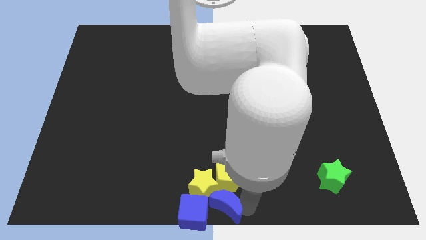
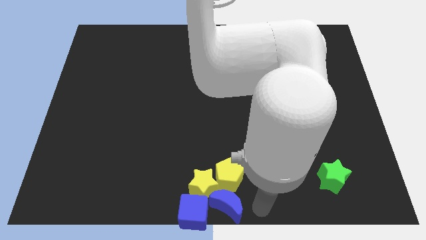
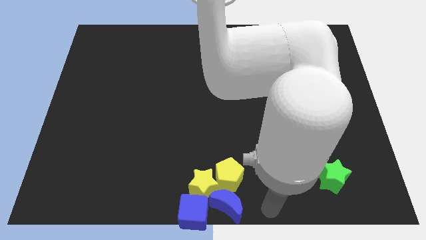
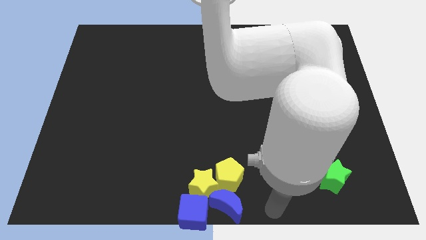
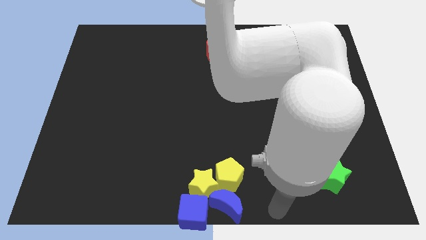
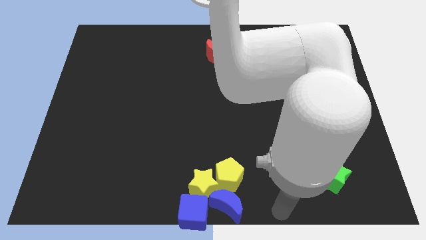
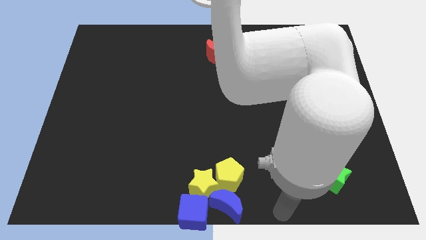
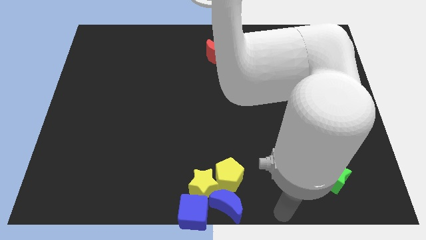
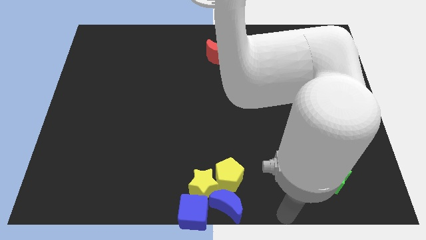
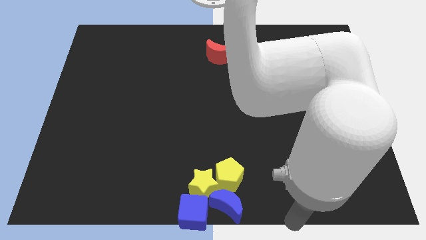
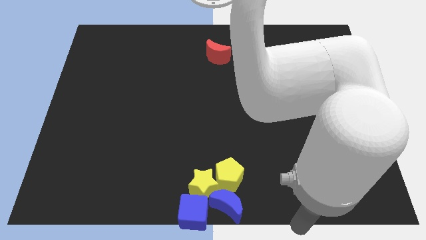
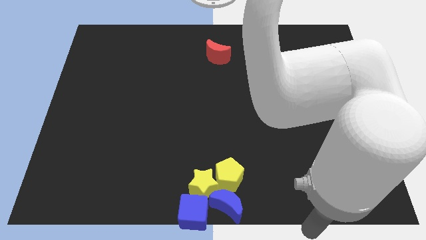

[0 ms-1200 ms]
go away from the group of blocks

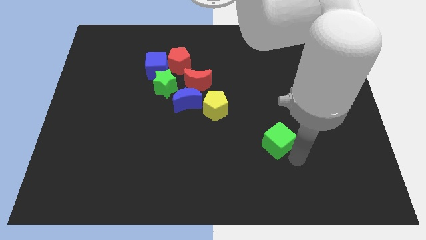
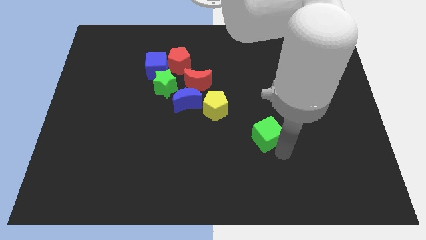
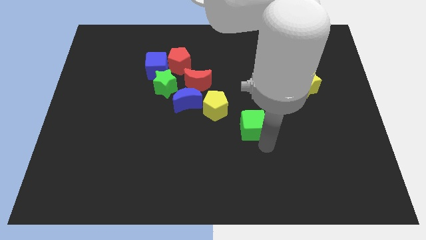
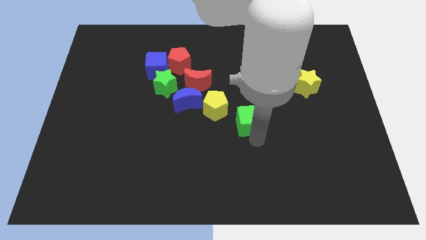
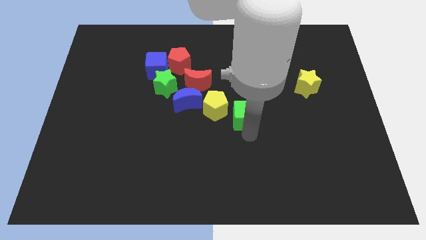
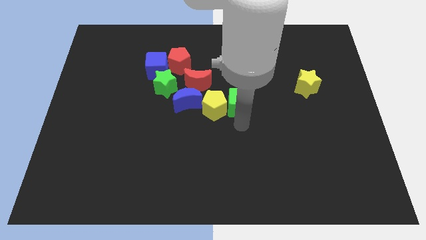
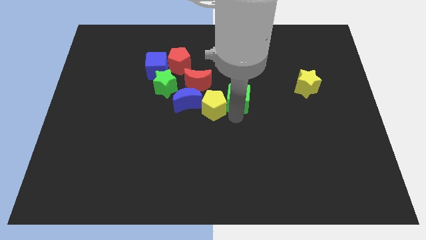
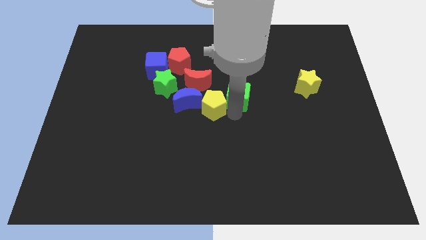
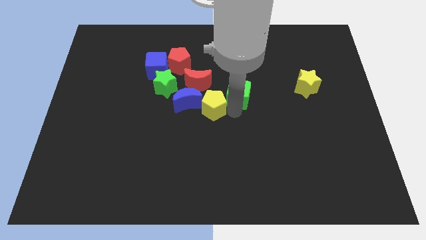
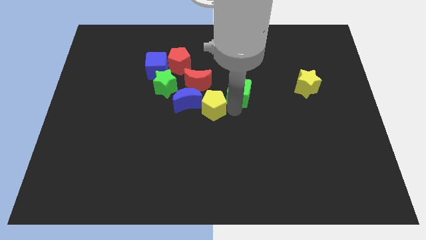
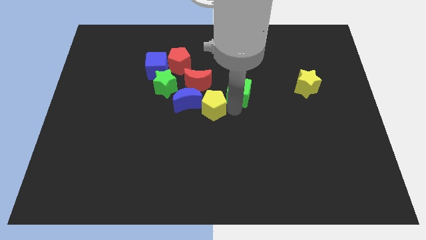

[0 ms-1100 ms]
push the green cube diagonally right to the yellow pentagon

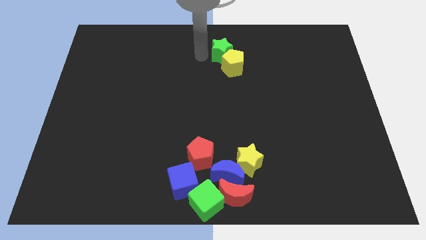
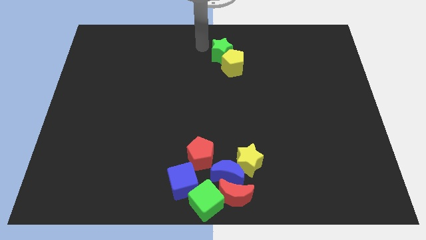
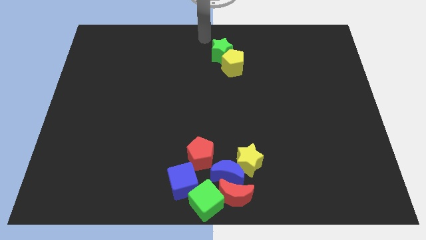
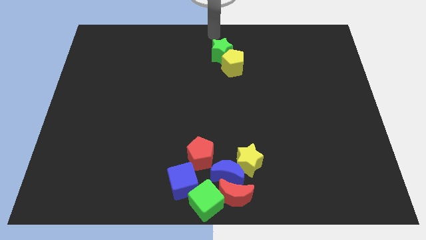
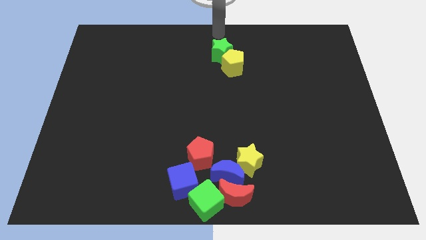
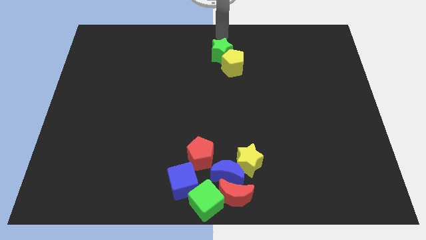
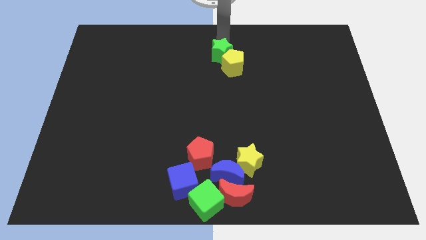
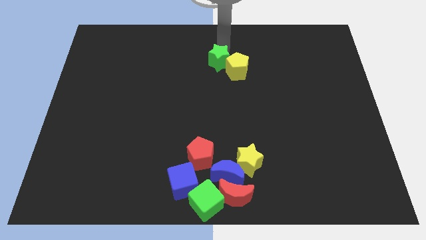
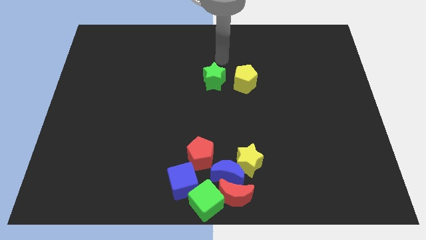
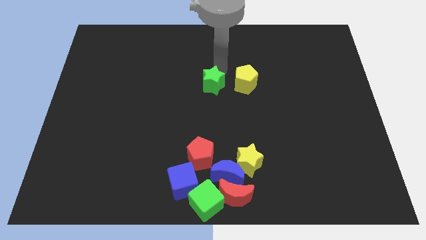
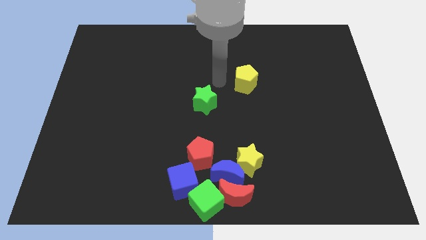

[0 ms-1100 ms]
move the green star to the center of the board

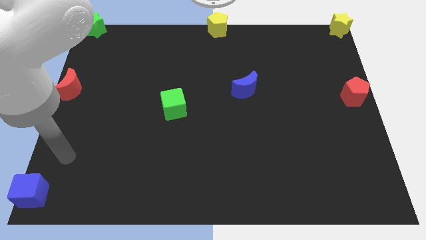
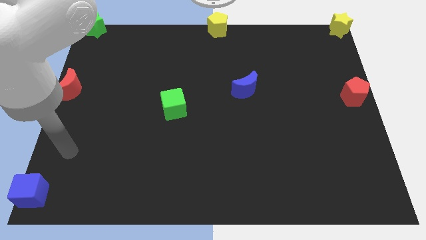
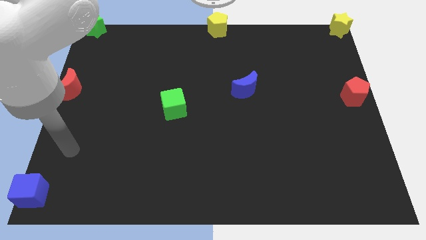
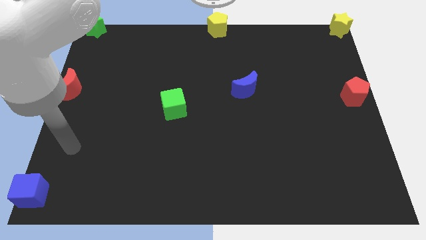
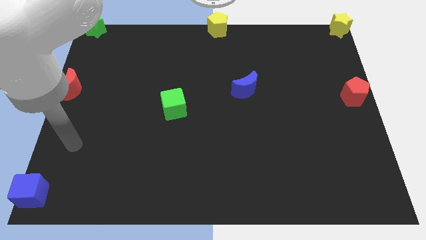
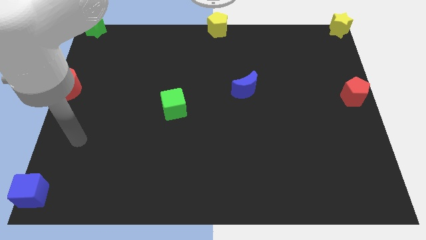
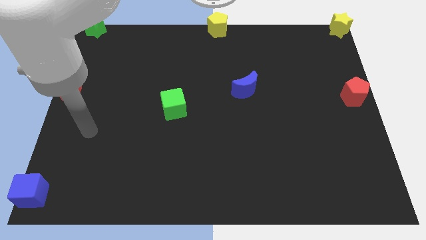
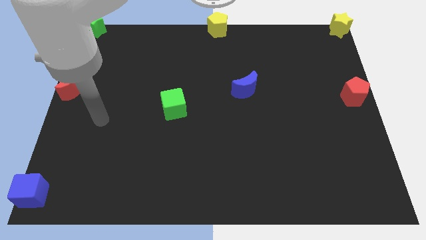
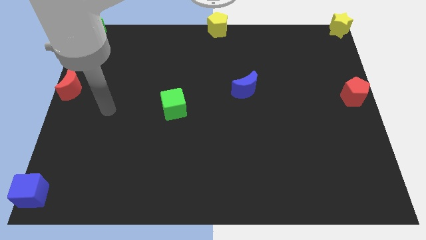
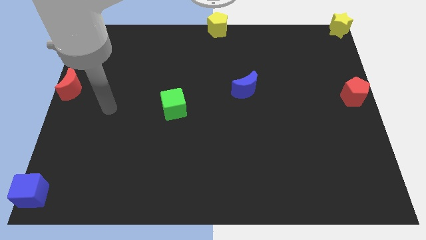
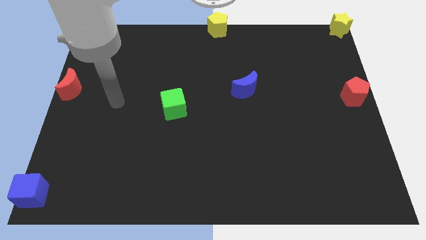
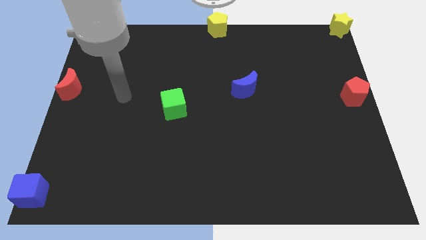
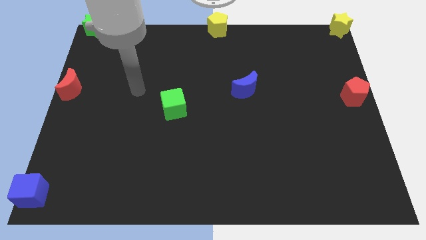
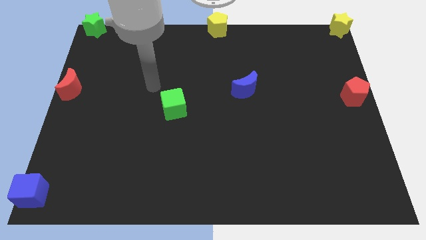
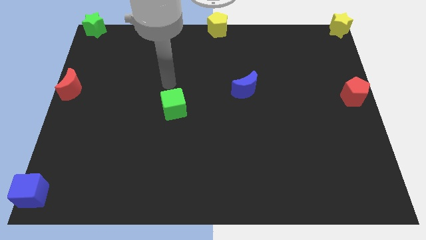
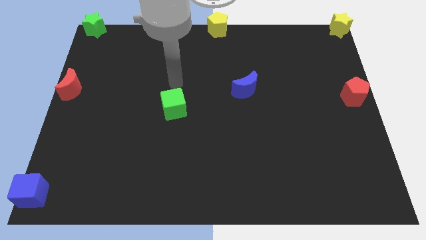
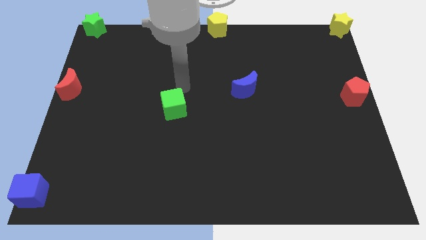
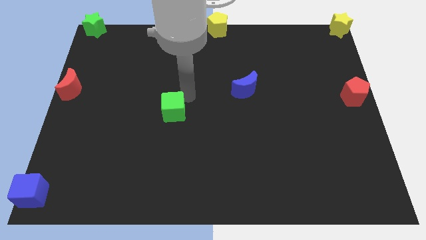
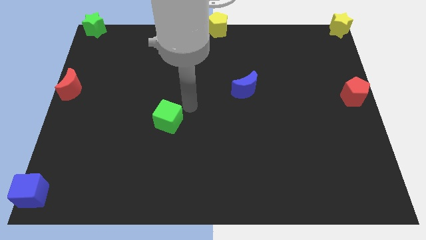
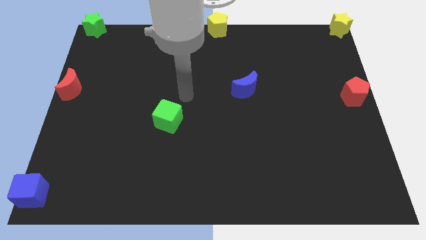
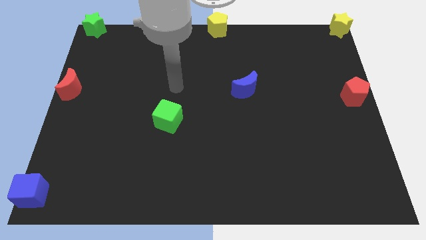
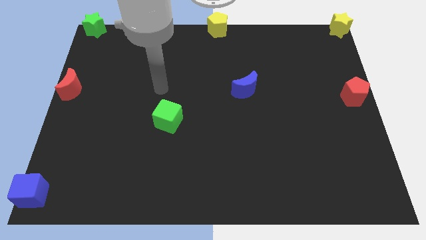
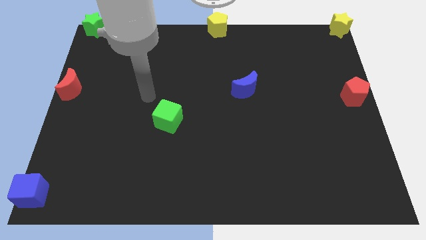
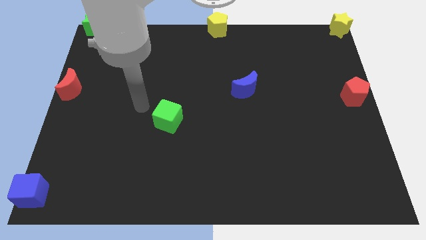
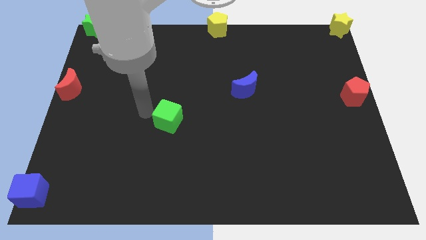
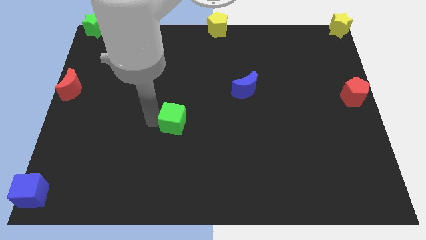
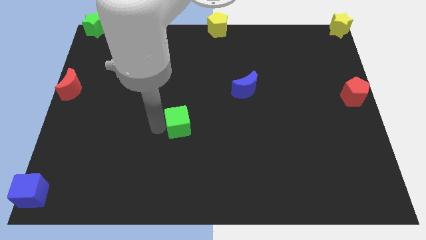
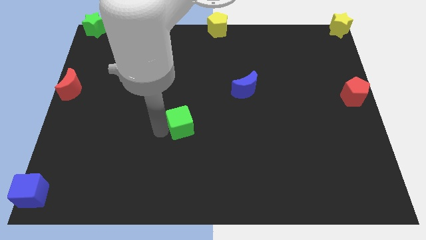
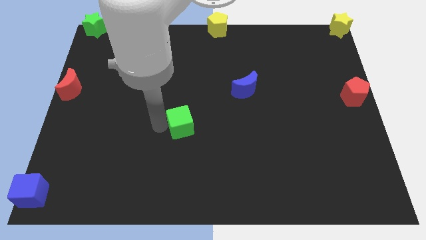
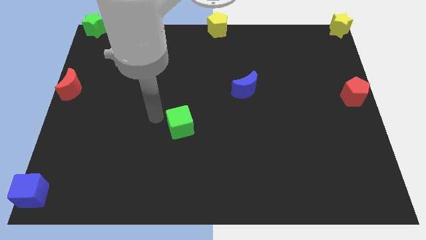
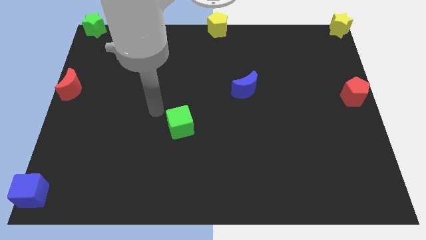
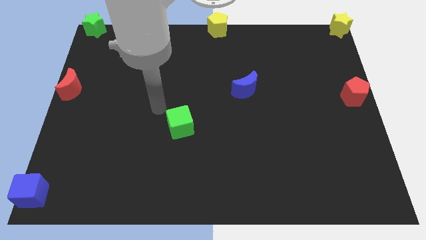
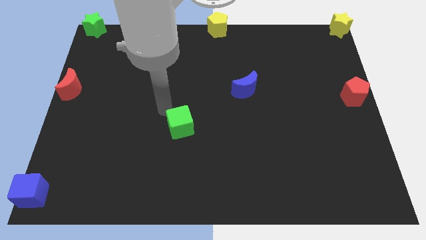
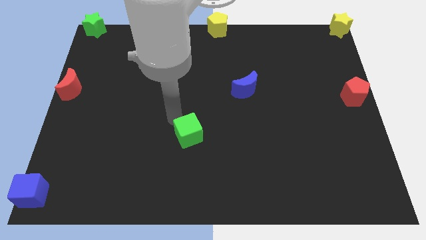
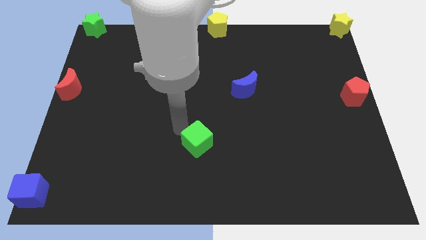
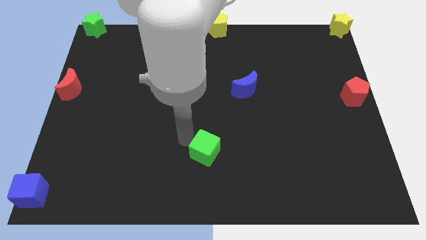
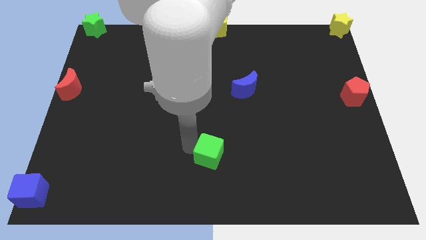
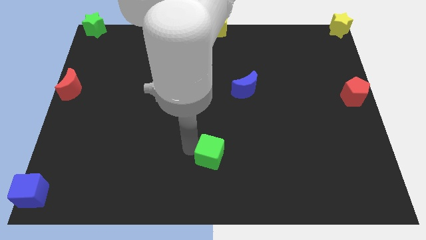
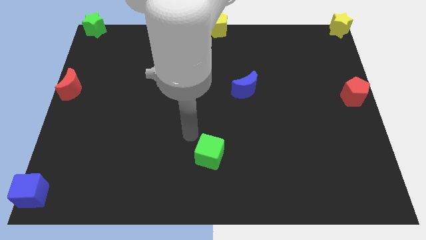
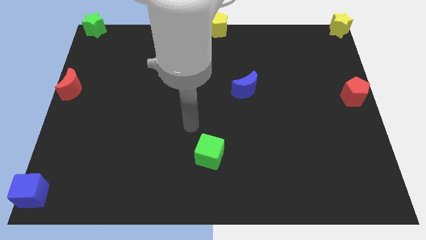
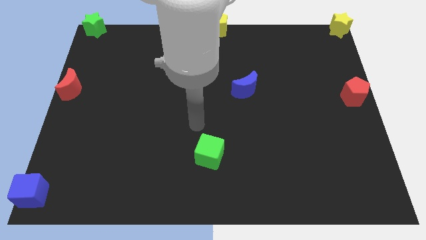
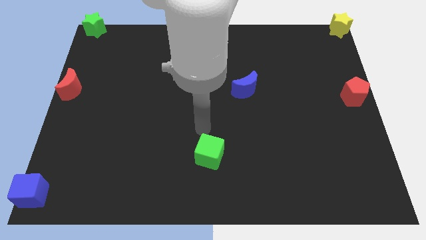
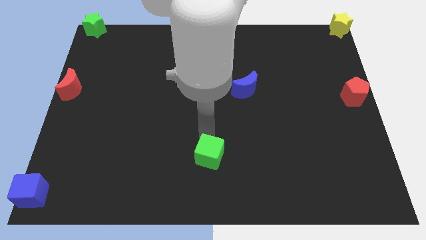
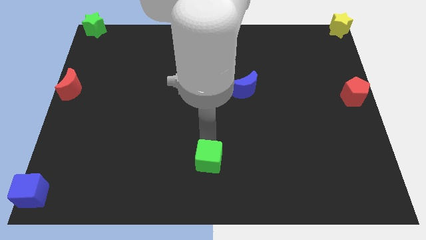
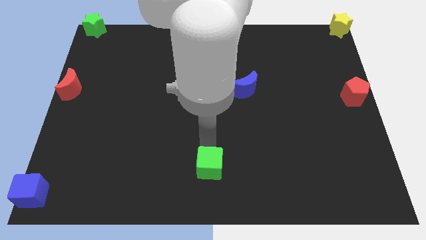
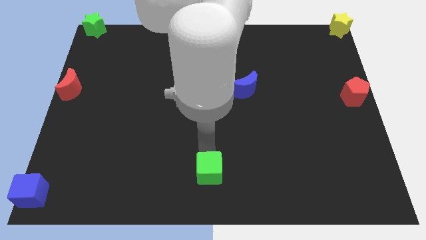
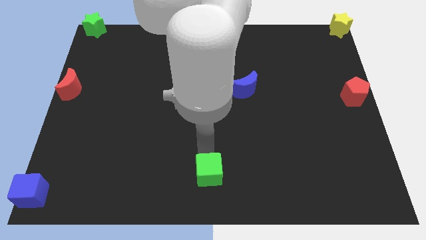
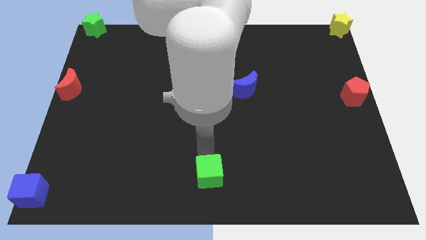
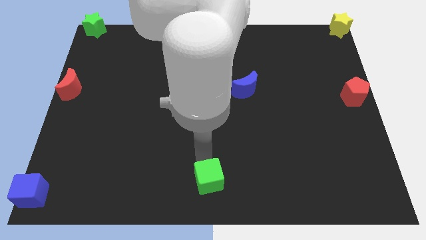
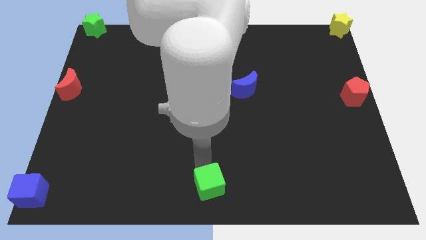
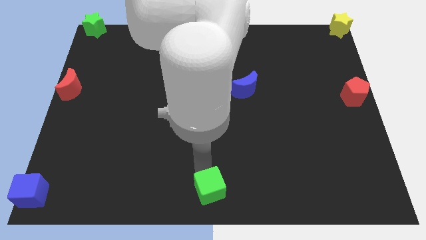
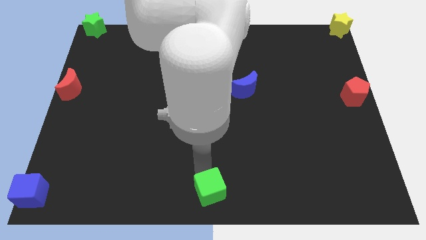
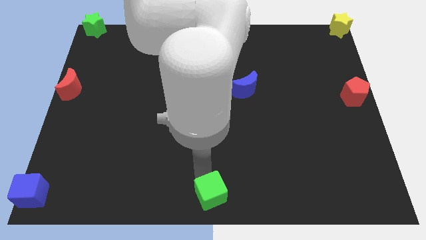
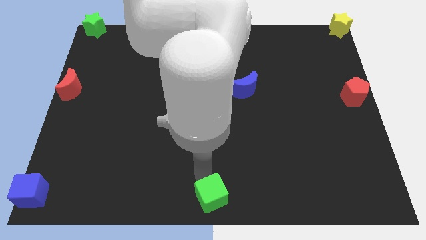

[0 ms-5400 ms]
move the green cube to thee bottom center of the board

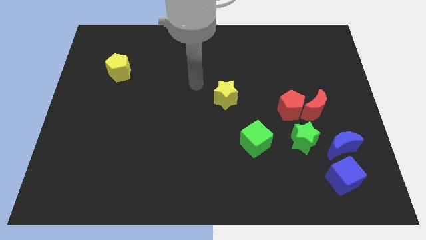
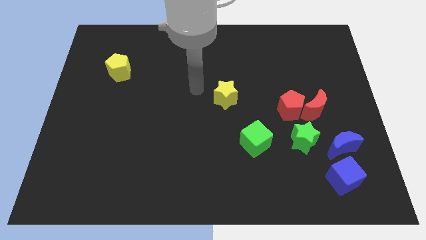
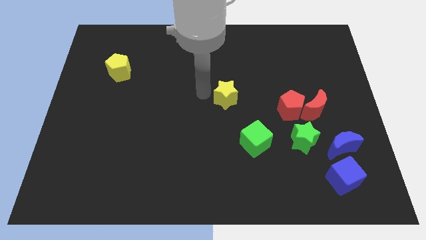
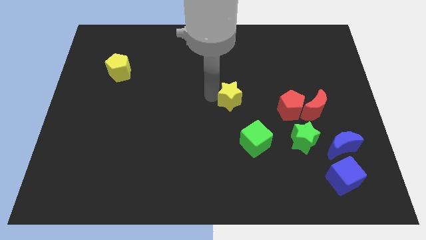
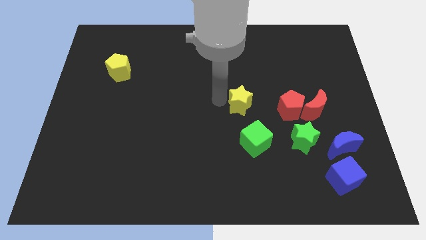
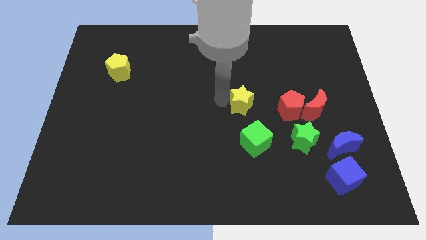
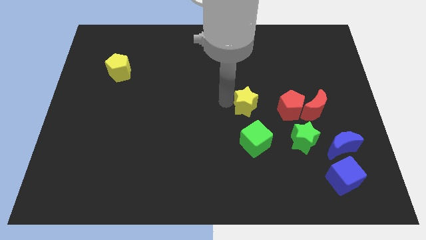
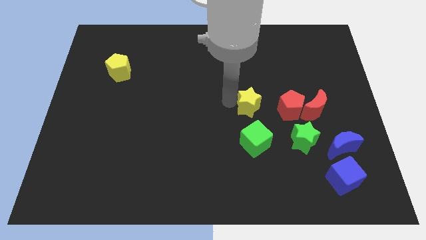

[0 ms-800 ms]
place yellow star on the top of green cube
